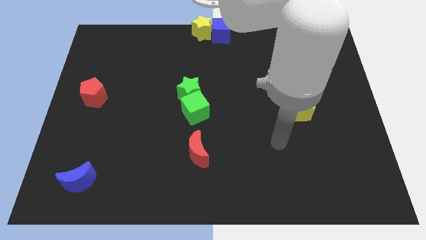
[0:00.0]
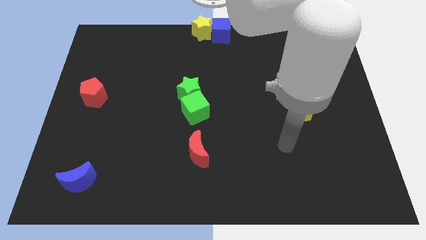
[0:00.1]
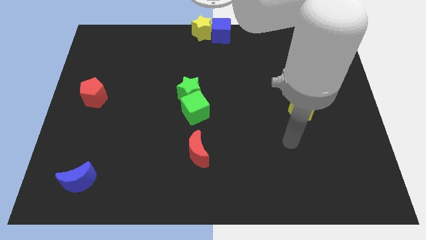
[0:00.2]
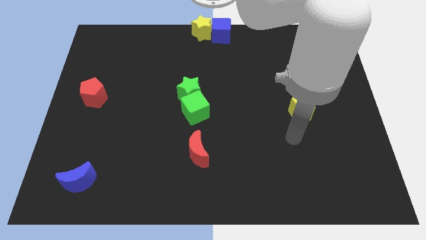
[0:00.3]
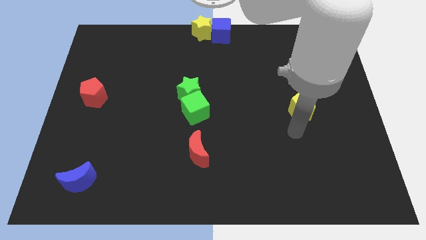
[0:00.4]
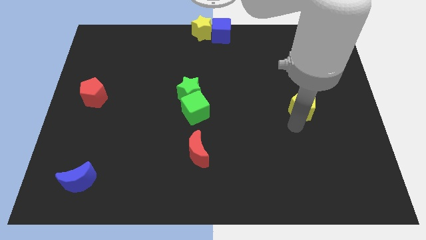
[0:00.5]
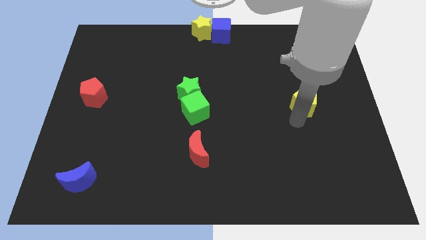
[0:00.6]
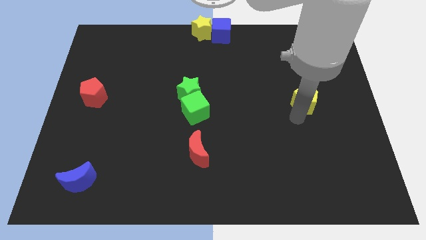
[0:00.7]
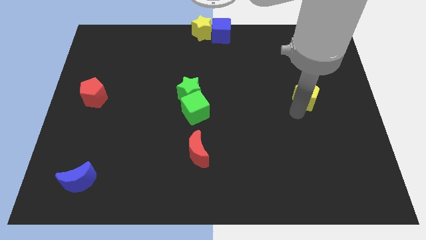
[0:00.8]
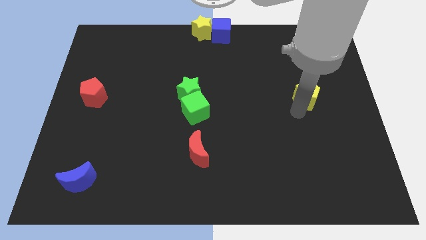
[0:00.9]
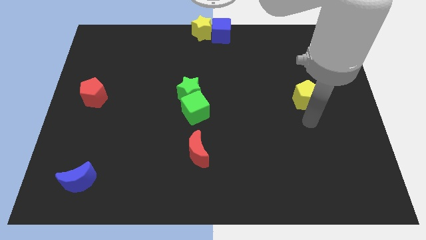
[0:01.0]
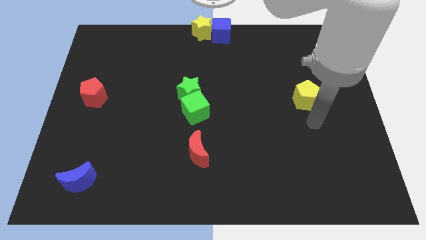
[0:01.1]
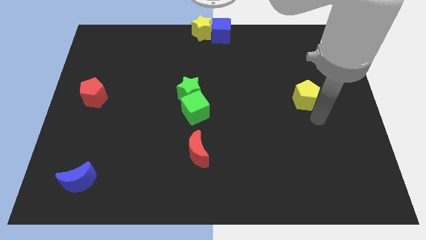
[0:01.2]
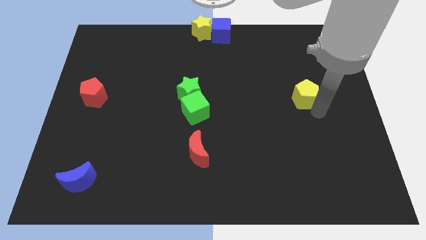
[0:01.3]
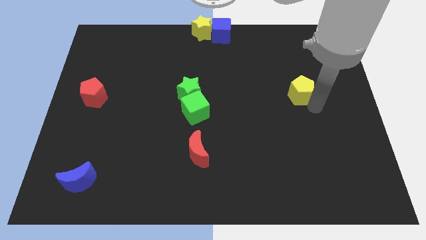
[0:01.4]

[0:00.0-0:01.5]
place the yellow pentagon horizontally to the right side of the green star

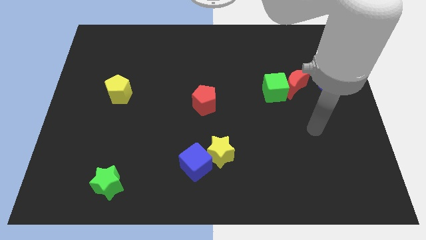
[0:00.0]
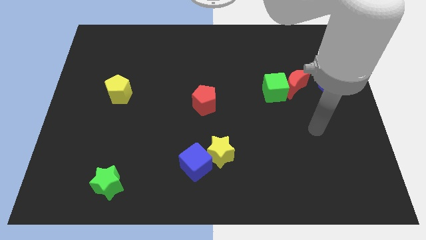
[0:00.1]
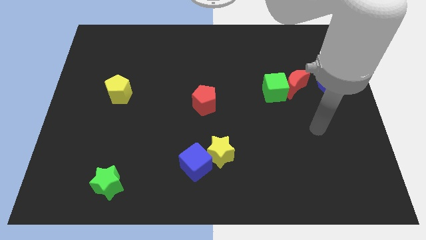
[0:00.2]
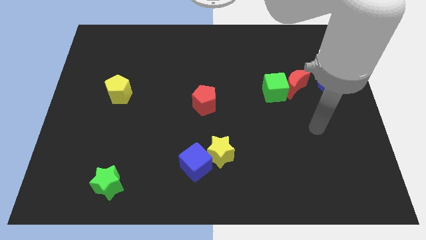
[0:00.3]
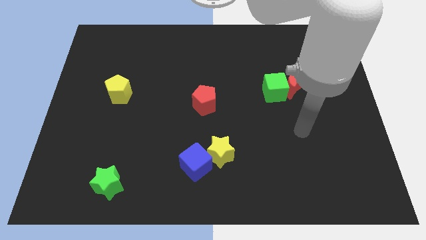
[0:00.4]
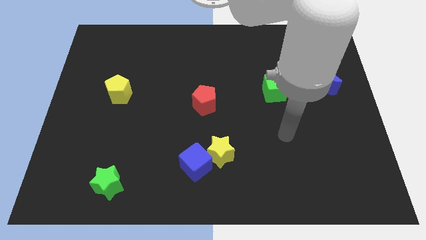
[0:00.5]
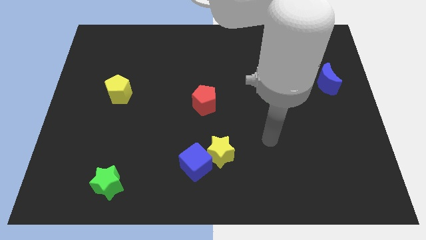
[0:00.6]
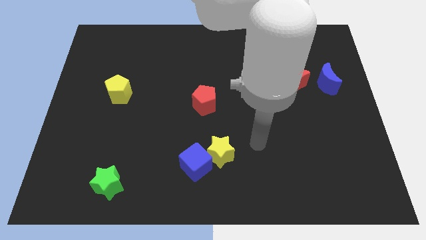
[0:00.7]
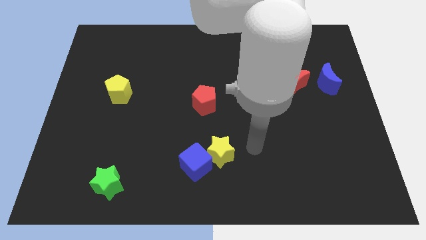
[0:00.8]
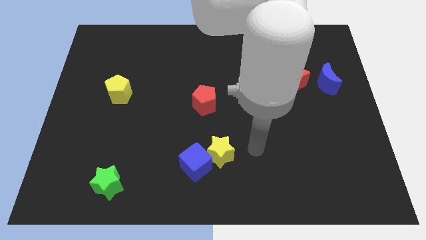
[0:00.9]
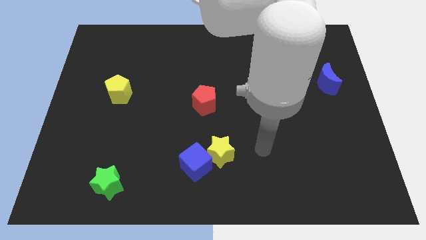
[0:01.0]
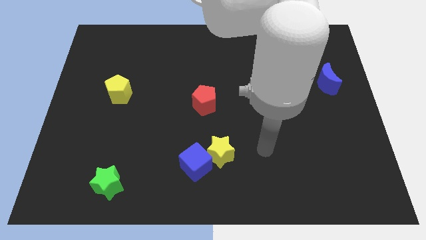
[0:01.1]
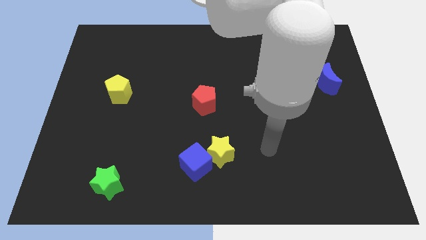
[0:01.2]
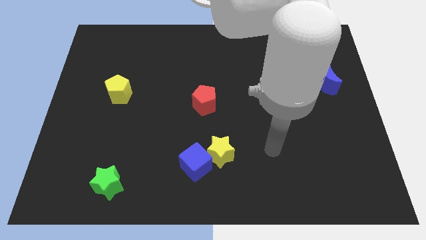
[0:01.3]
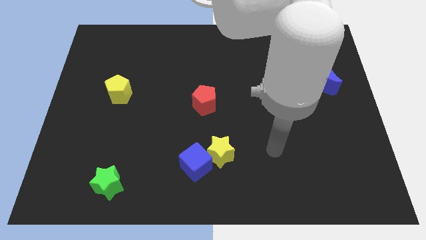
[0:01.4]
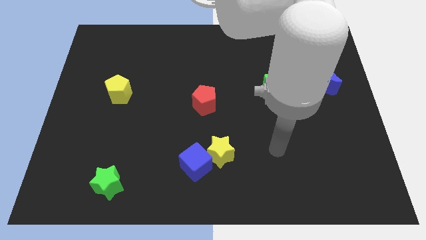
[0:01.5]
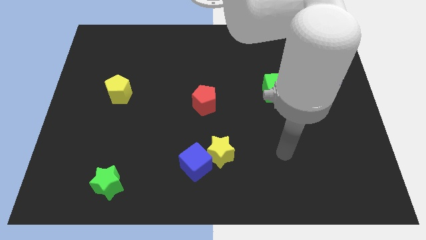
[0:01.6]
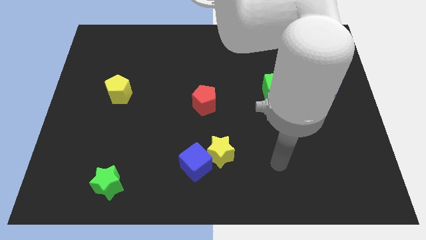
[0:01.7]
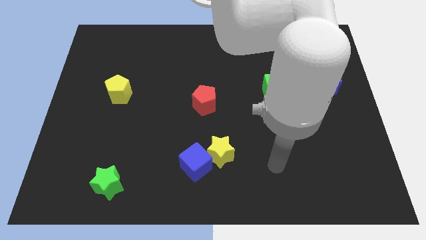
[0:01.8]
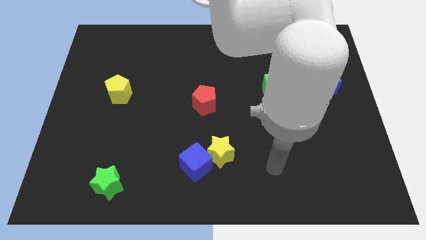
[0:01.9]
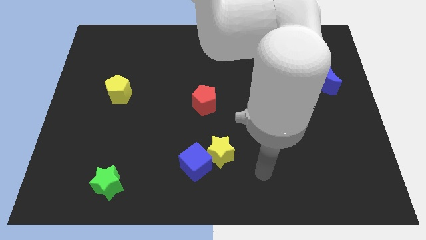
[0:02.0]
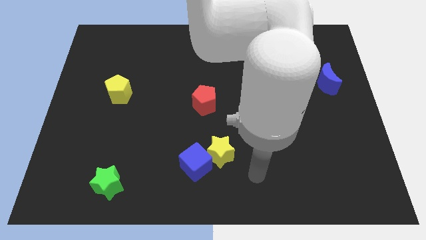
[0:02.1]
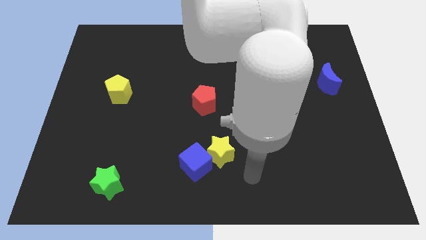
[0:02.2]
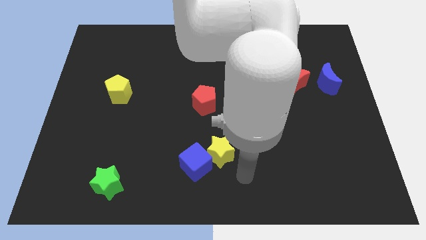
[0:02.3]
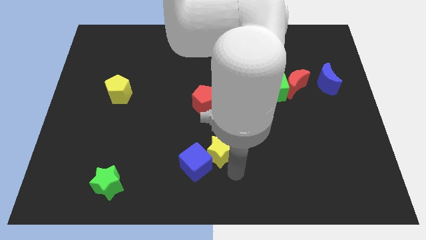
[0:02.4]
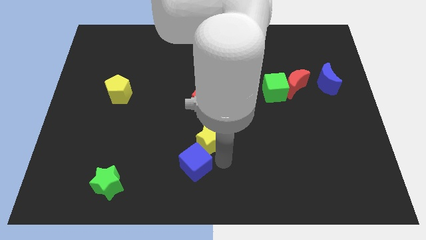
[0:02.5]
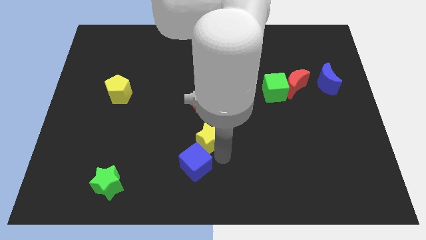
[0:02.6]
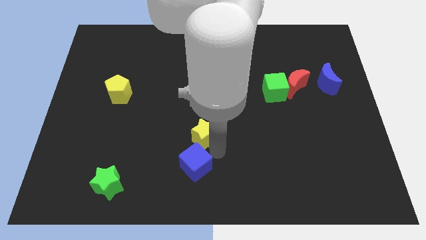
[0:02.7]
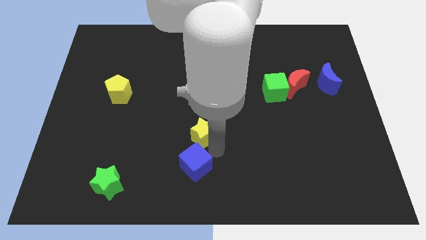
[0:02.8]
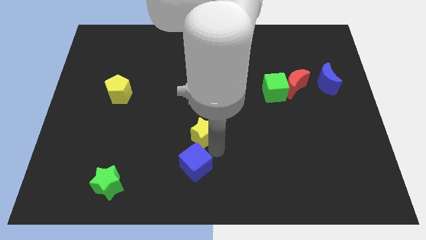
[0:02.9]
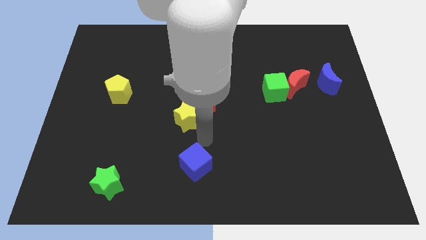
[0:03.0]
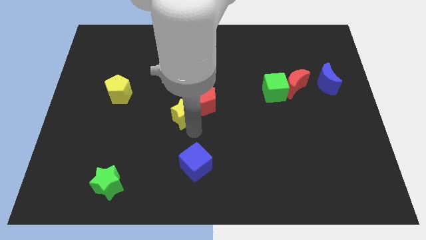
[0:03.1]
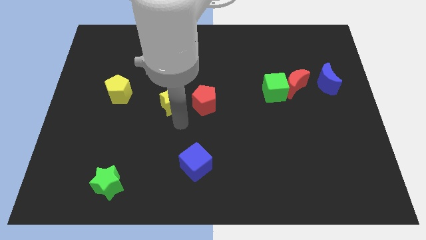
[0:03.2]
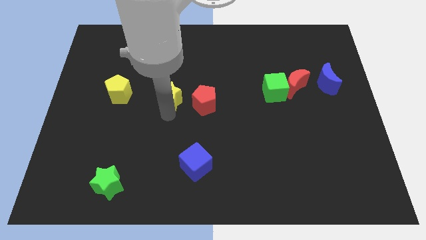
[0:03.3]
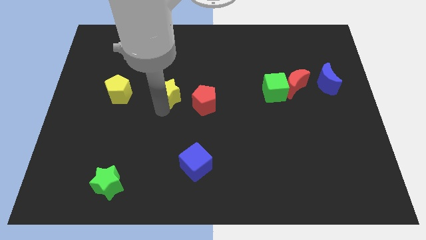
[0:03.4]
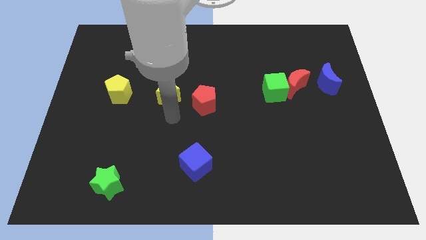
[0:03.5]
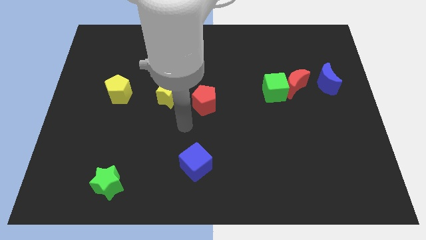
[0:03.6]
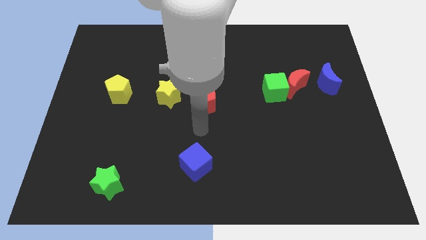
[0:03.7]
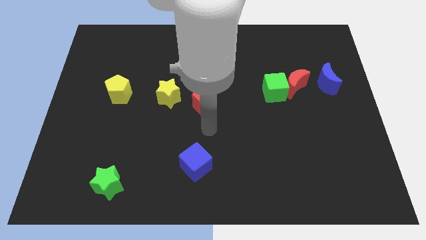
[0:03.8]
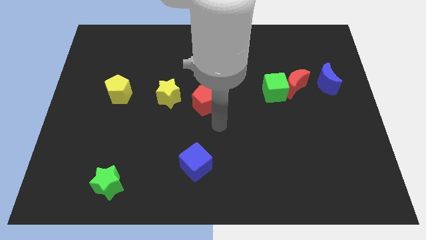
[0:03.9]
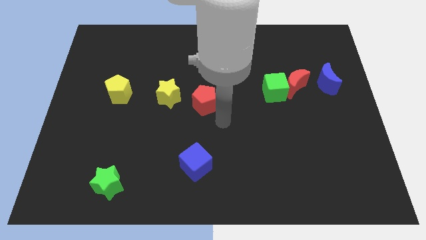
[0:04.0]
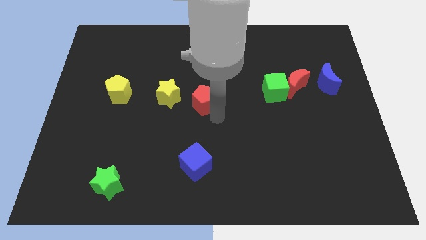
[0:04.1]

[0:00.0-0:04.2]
place the yellow star in between the red pentagon and yellow pentagon

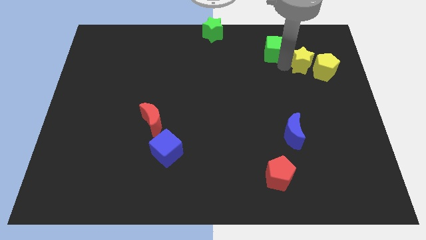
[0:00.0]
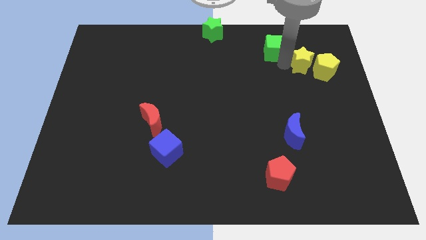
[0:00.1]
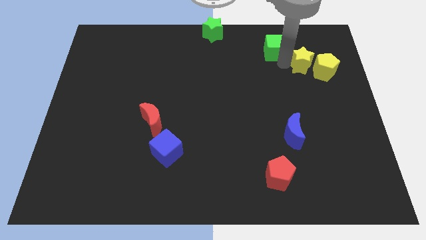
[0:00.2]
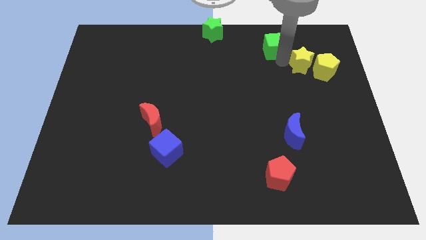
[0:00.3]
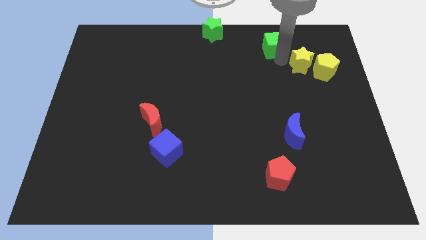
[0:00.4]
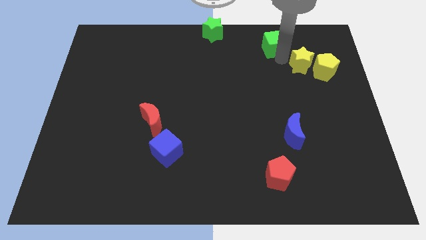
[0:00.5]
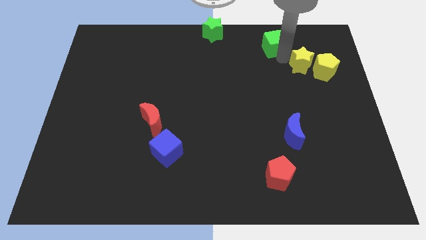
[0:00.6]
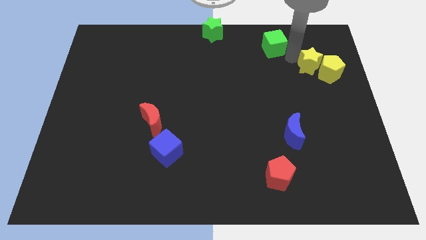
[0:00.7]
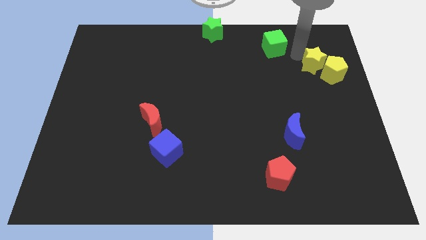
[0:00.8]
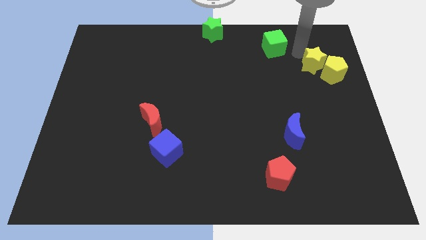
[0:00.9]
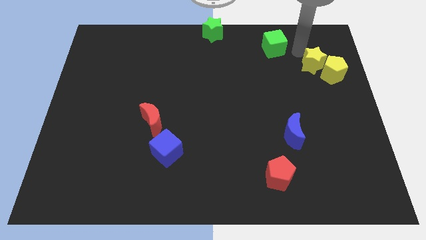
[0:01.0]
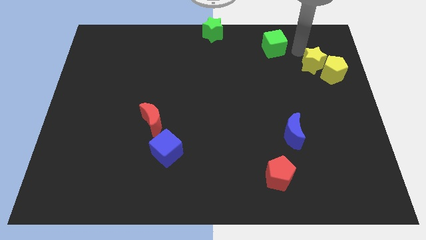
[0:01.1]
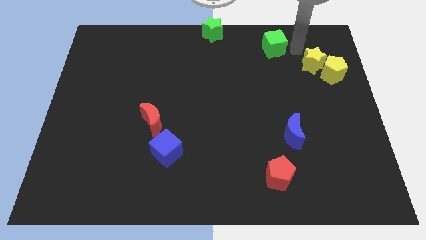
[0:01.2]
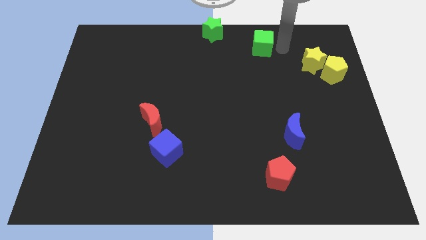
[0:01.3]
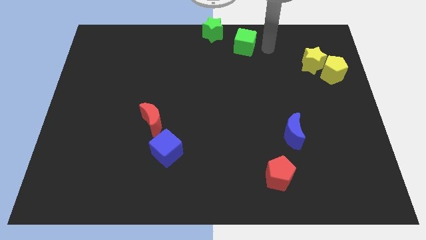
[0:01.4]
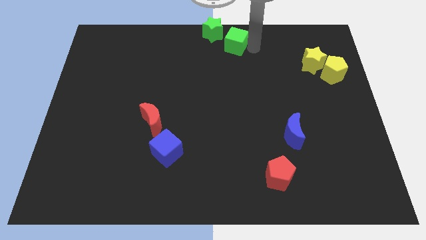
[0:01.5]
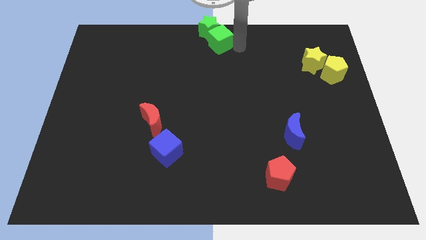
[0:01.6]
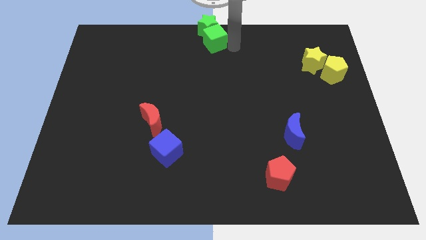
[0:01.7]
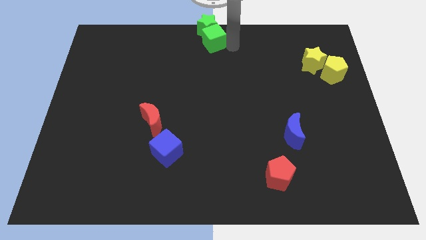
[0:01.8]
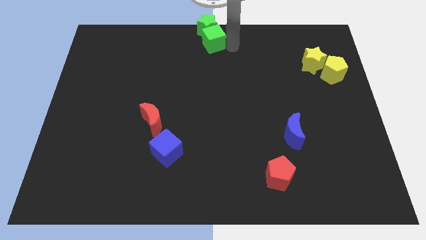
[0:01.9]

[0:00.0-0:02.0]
move the green cube into the green star

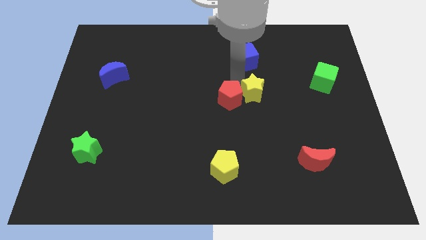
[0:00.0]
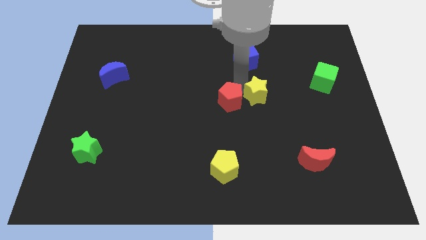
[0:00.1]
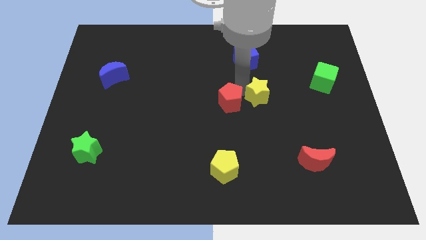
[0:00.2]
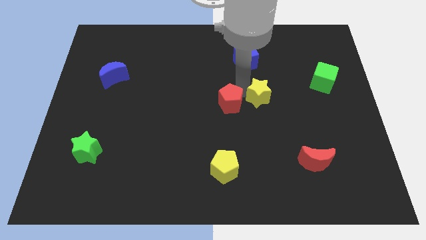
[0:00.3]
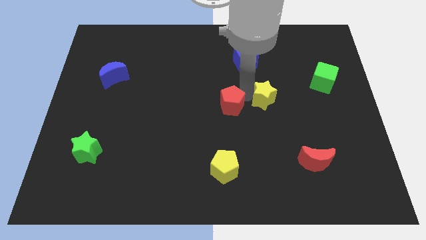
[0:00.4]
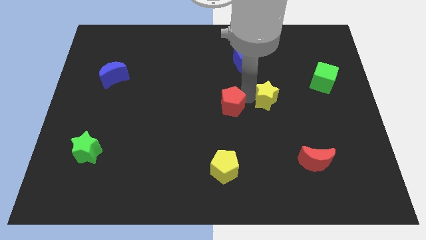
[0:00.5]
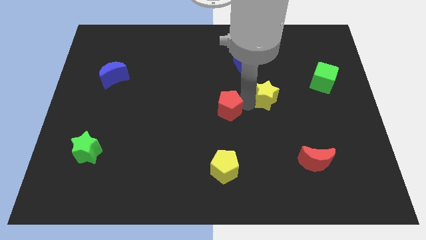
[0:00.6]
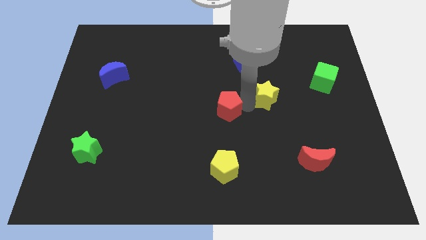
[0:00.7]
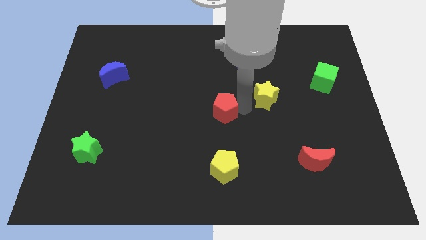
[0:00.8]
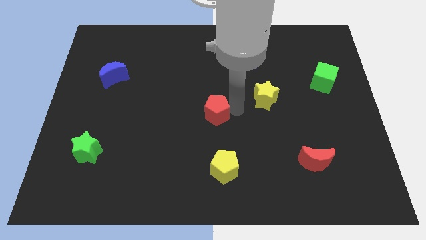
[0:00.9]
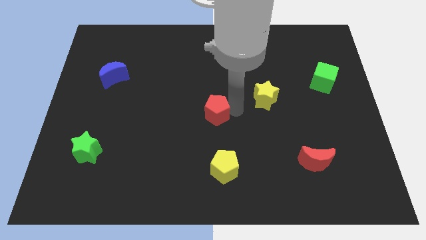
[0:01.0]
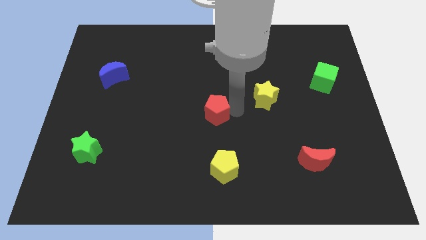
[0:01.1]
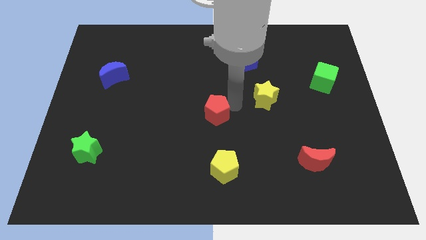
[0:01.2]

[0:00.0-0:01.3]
separate the red pentagon from the yellow star

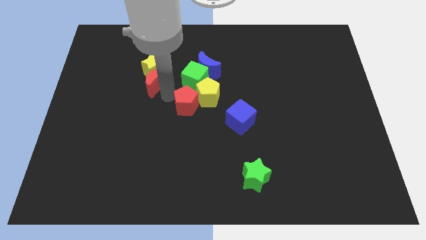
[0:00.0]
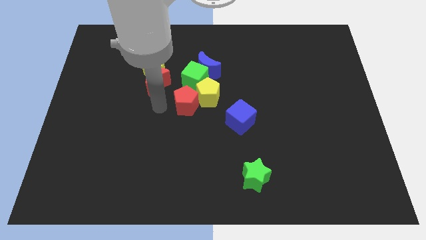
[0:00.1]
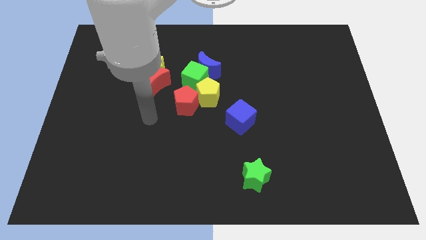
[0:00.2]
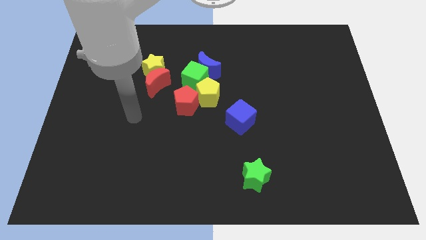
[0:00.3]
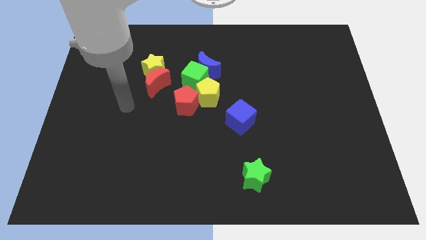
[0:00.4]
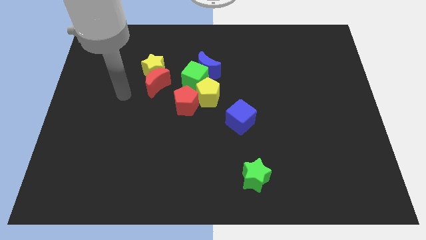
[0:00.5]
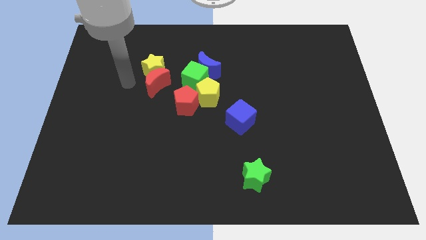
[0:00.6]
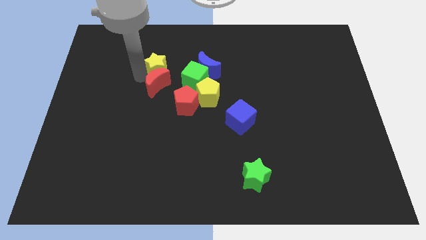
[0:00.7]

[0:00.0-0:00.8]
move your arm towards the yellow star
